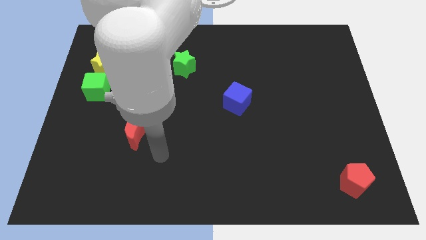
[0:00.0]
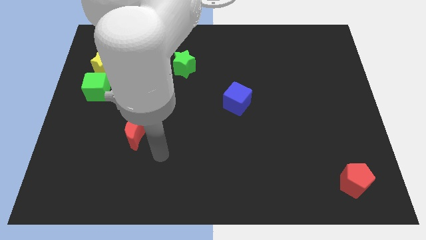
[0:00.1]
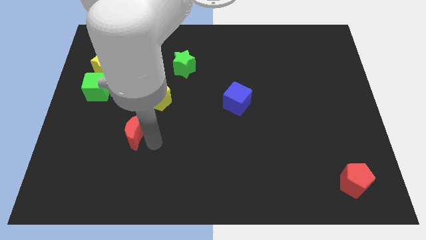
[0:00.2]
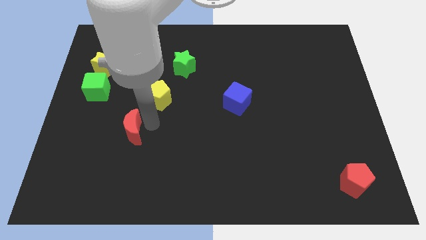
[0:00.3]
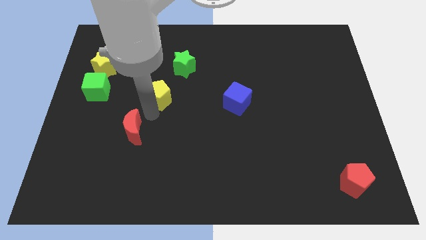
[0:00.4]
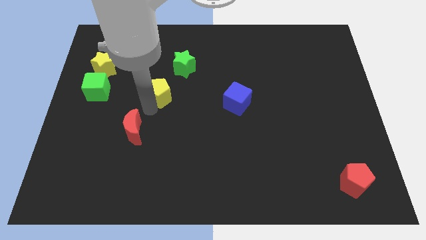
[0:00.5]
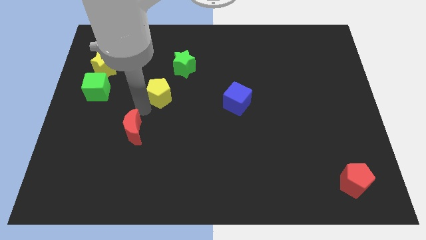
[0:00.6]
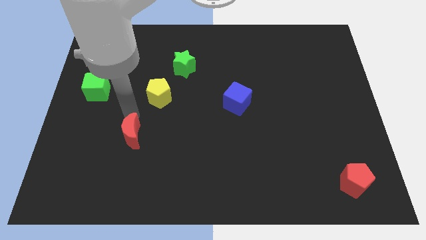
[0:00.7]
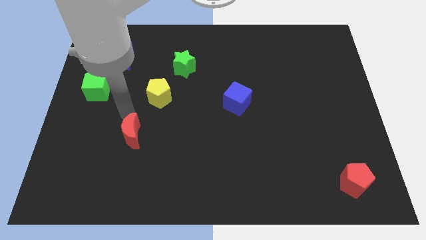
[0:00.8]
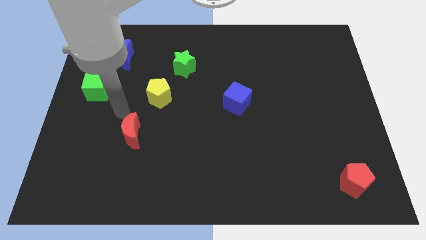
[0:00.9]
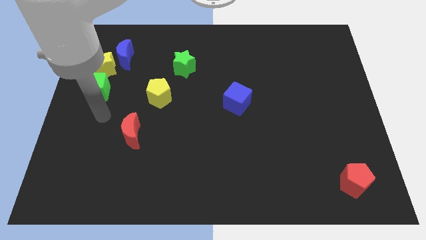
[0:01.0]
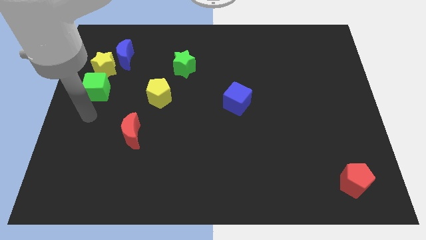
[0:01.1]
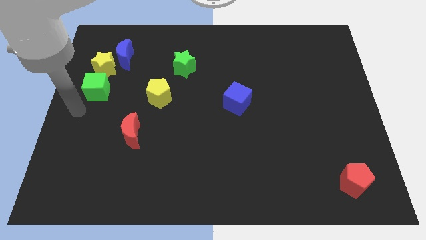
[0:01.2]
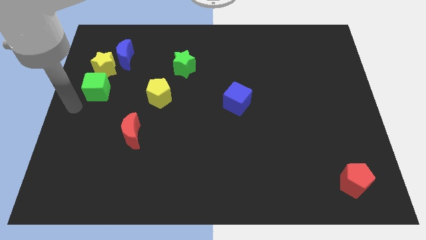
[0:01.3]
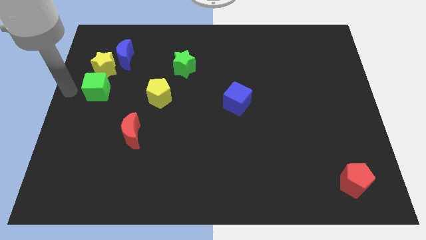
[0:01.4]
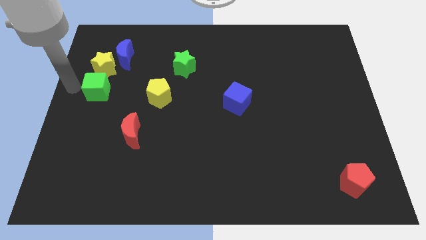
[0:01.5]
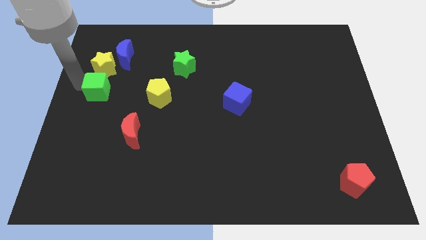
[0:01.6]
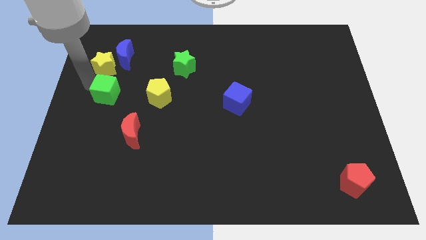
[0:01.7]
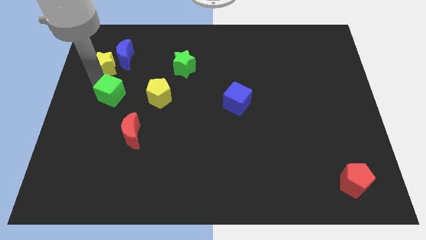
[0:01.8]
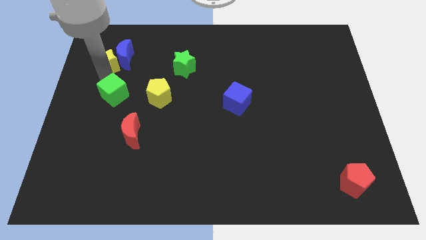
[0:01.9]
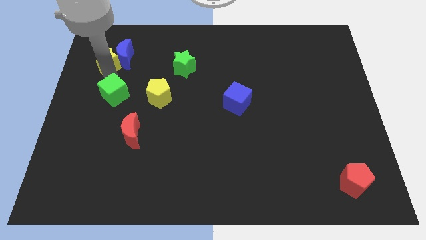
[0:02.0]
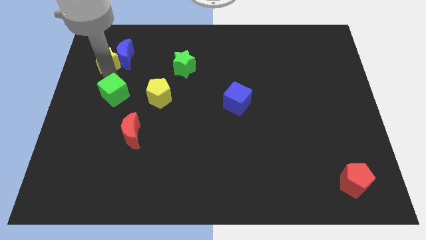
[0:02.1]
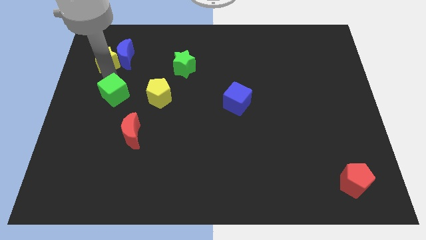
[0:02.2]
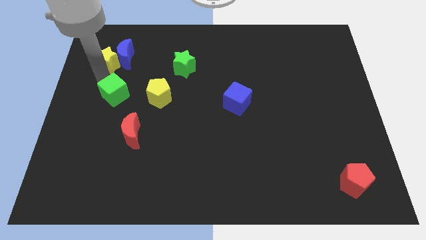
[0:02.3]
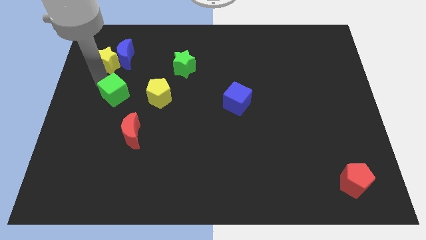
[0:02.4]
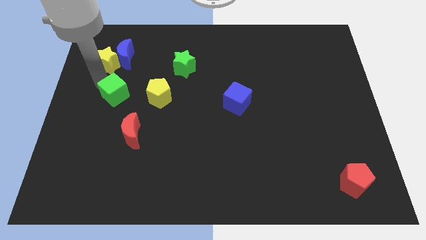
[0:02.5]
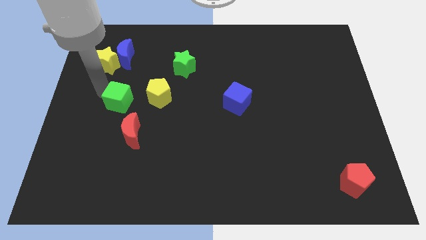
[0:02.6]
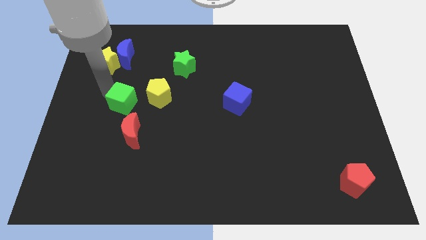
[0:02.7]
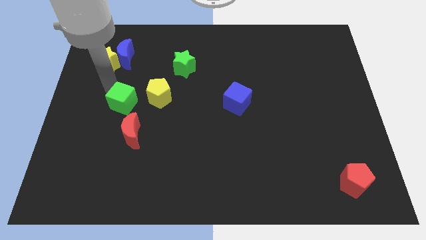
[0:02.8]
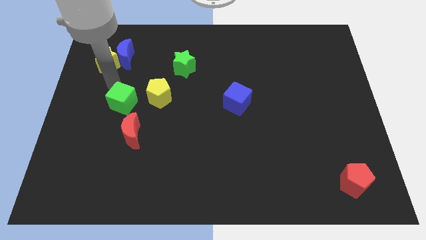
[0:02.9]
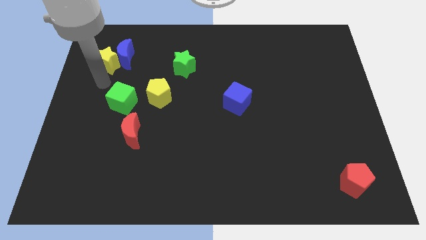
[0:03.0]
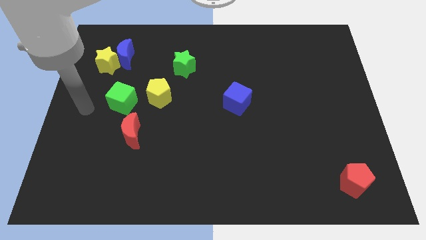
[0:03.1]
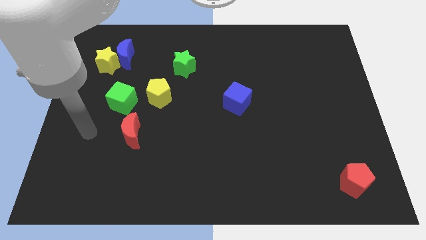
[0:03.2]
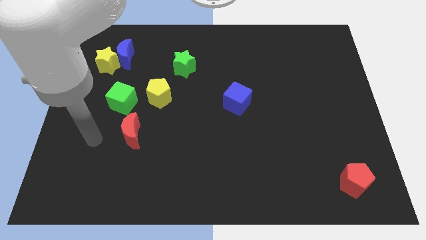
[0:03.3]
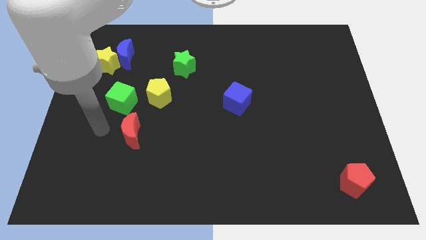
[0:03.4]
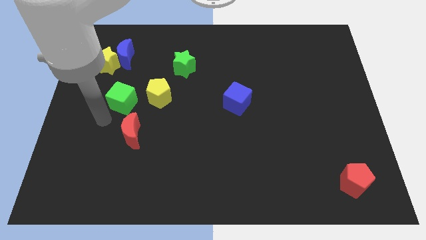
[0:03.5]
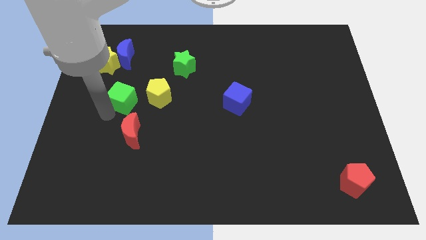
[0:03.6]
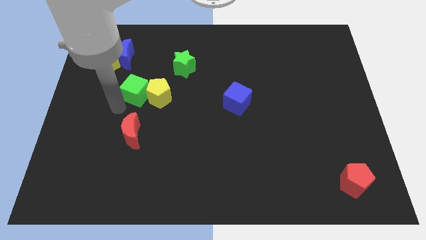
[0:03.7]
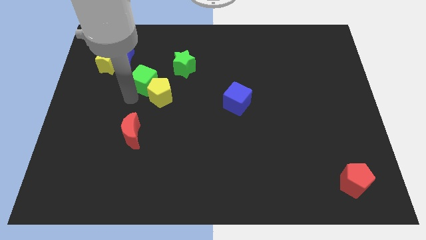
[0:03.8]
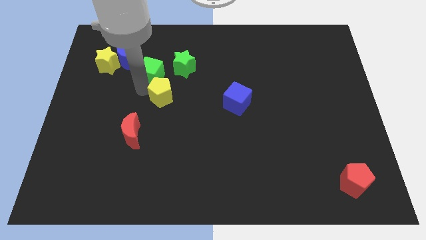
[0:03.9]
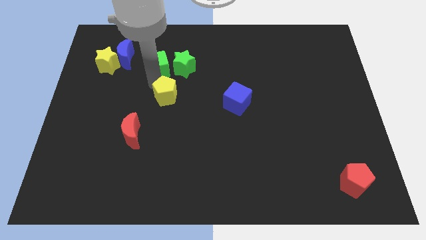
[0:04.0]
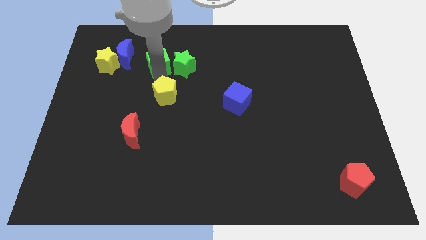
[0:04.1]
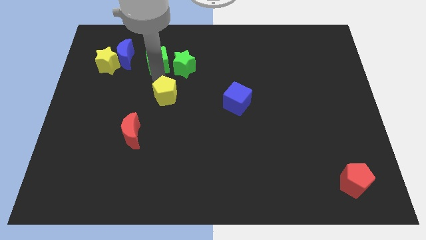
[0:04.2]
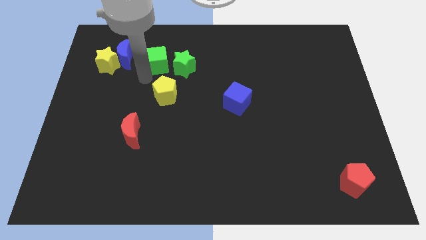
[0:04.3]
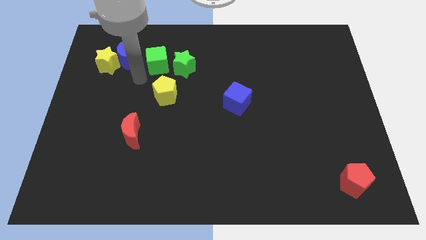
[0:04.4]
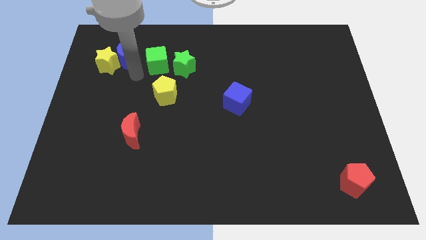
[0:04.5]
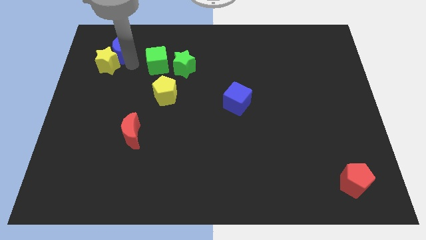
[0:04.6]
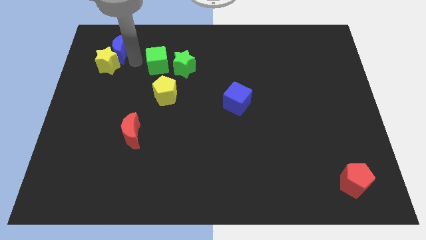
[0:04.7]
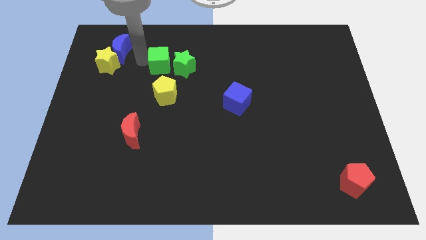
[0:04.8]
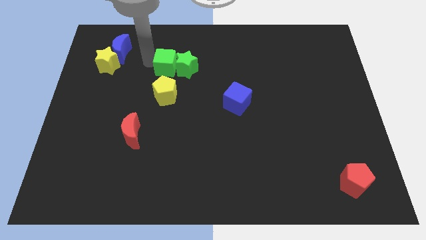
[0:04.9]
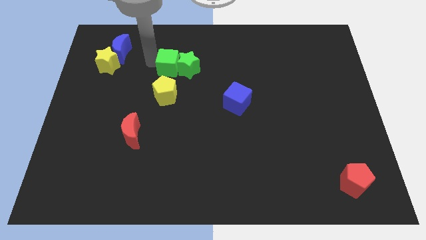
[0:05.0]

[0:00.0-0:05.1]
move the green cube next to the green star

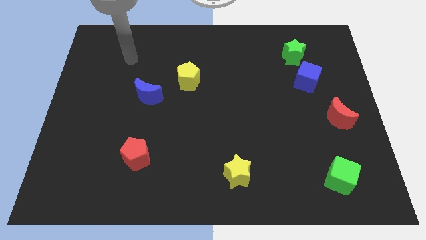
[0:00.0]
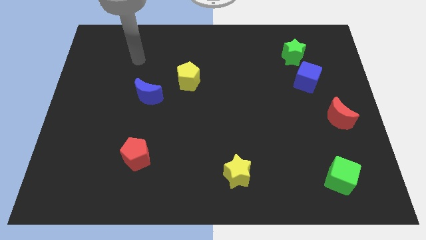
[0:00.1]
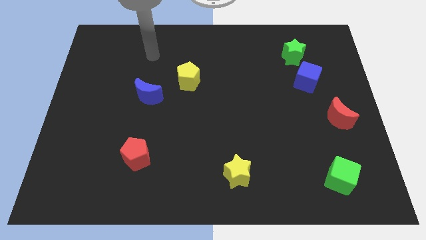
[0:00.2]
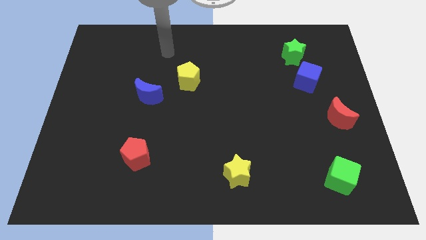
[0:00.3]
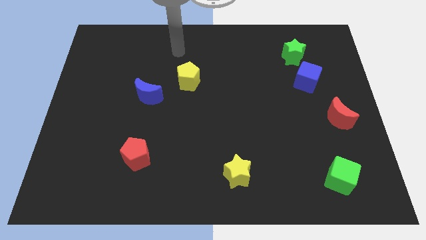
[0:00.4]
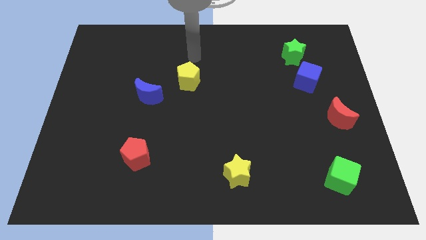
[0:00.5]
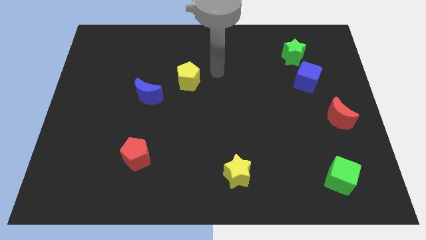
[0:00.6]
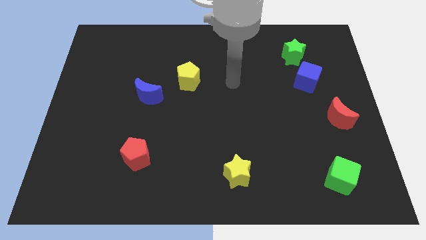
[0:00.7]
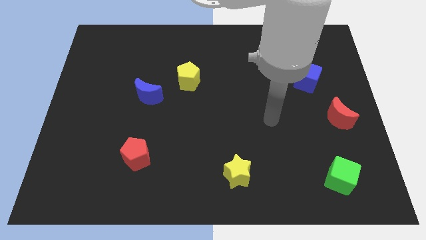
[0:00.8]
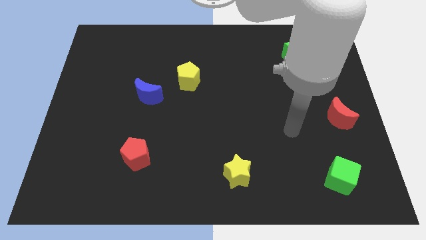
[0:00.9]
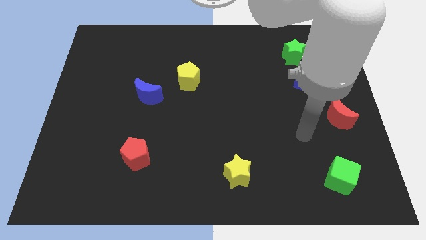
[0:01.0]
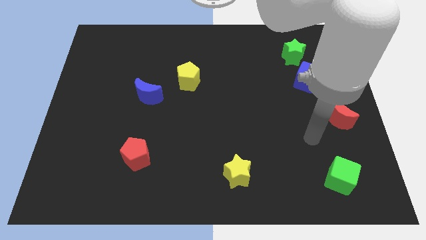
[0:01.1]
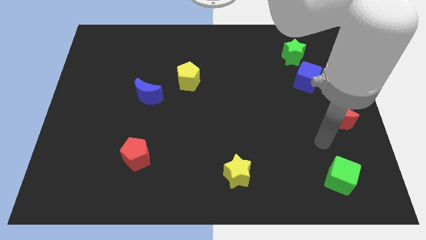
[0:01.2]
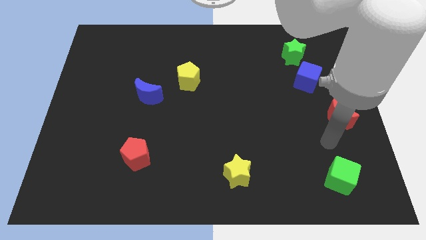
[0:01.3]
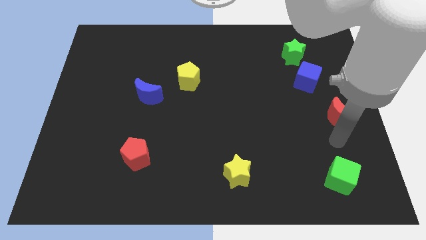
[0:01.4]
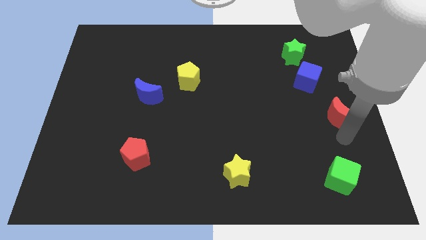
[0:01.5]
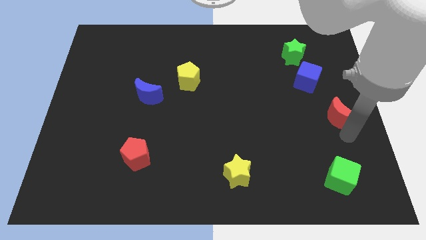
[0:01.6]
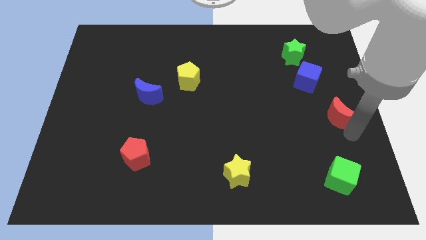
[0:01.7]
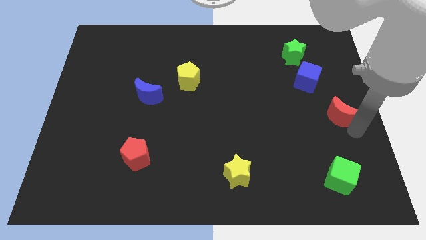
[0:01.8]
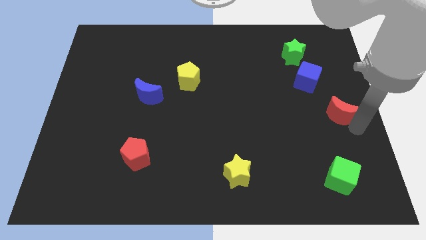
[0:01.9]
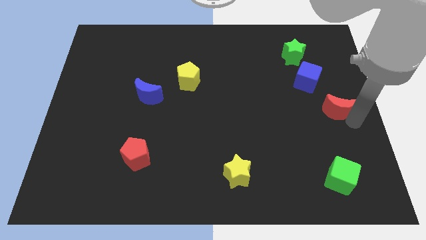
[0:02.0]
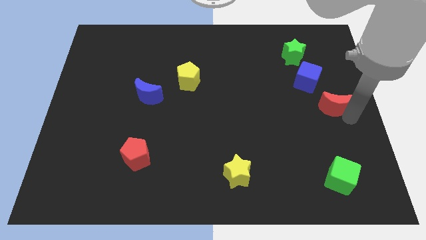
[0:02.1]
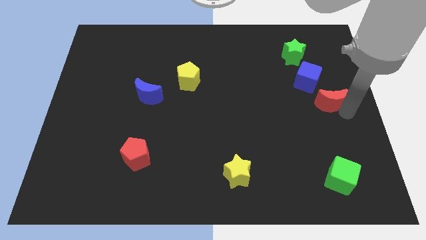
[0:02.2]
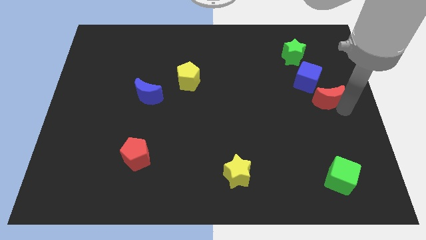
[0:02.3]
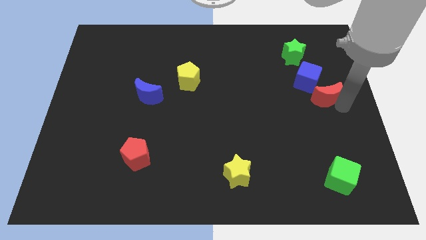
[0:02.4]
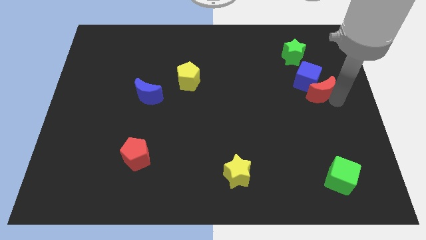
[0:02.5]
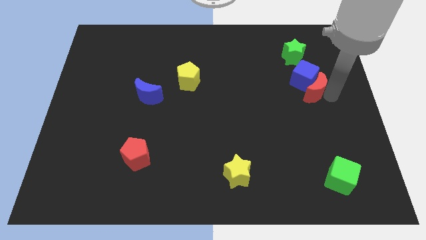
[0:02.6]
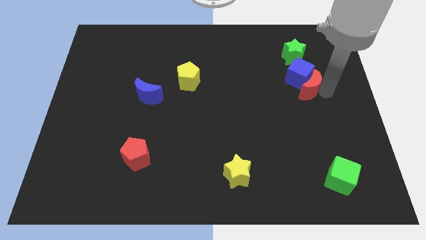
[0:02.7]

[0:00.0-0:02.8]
put the red moon next to the blue cube

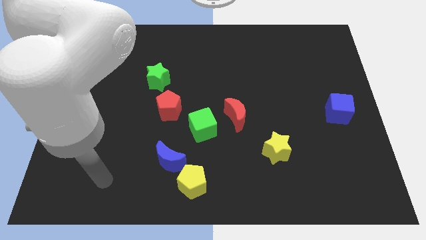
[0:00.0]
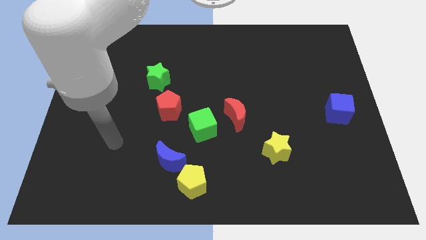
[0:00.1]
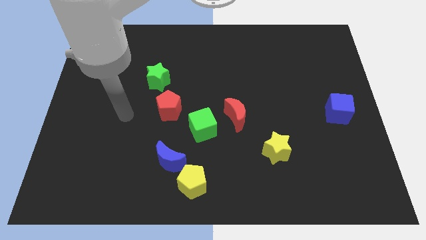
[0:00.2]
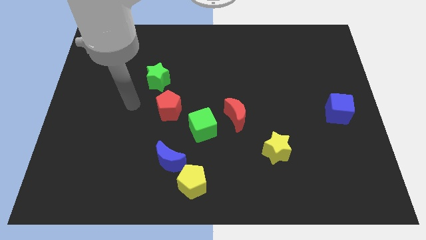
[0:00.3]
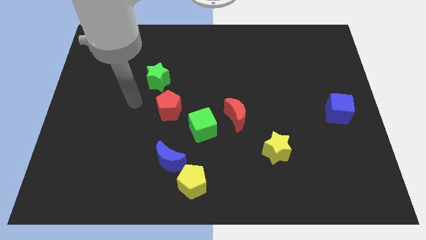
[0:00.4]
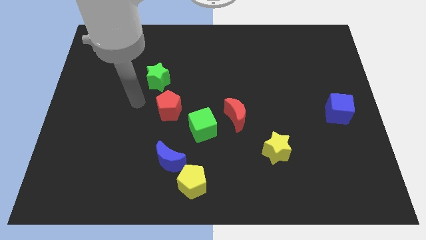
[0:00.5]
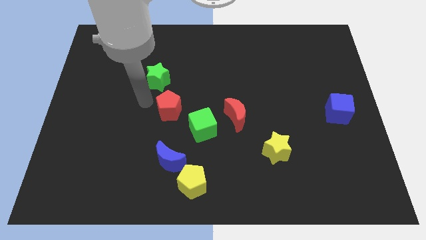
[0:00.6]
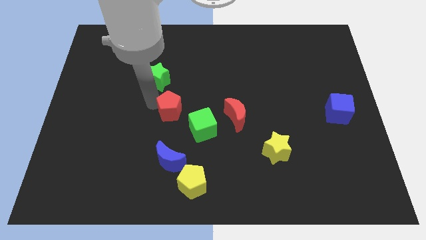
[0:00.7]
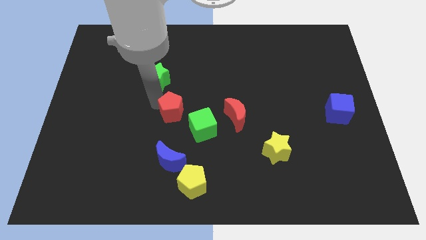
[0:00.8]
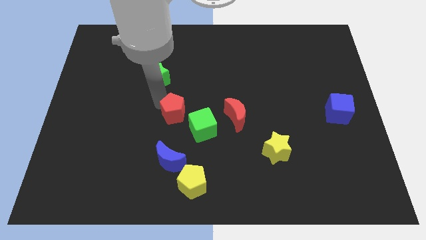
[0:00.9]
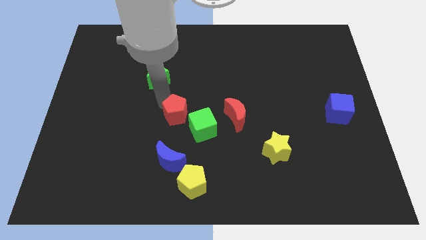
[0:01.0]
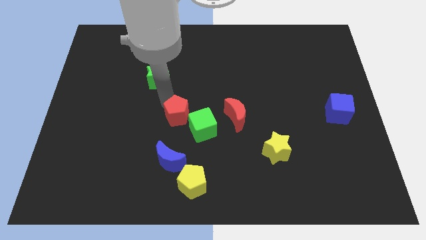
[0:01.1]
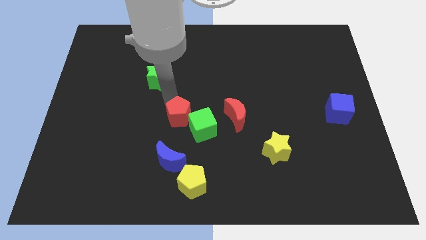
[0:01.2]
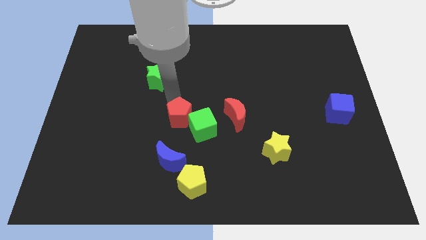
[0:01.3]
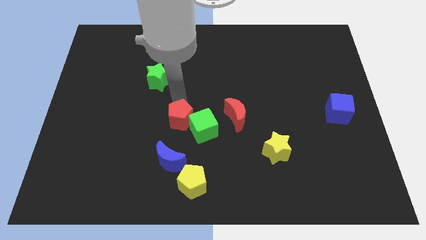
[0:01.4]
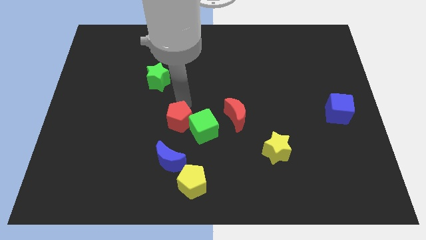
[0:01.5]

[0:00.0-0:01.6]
slide the red pentagon to the green cube
